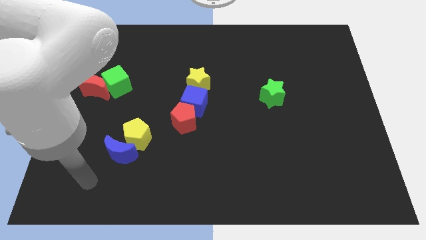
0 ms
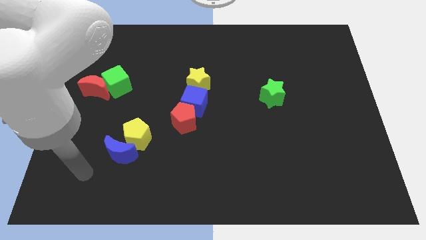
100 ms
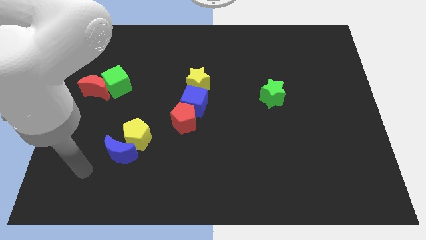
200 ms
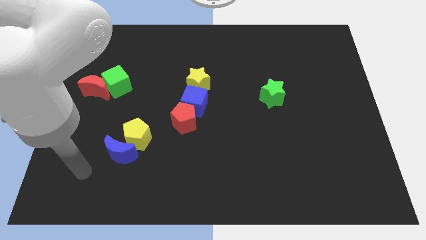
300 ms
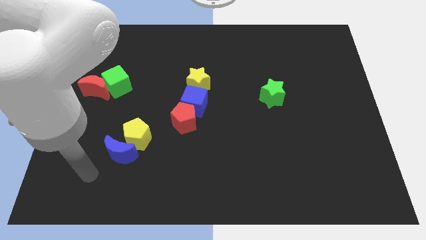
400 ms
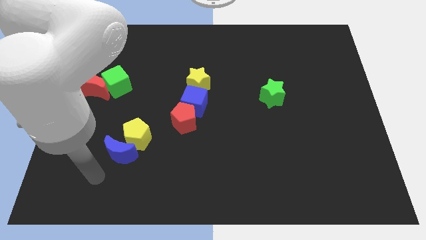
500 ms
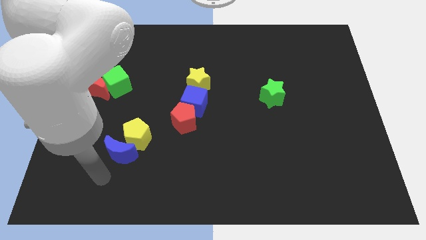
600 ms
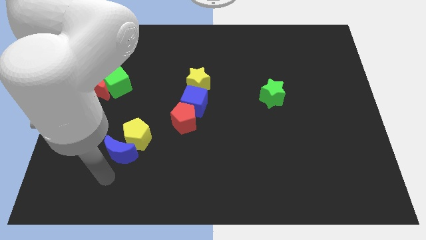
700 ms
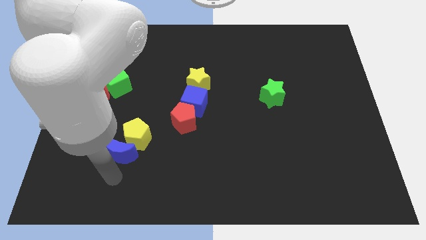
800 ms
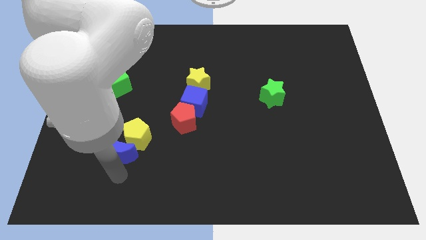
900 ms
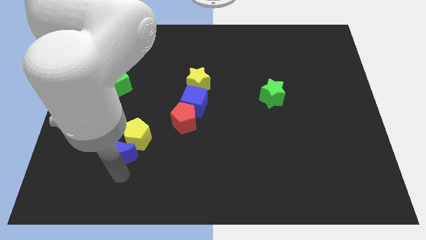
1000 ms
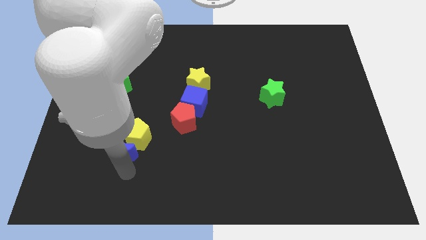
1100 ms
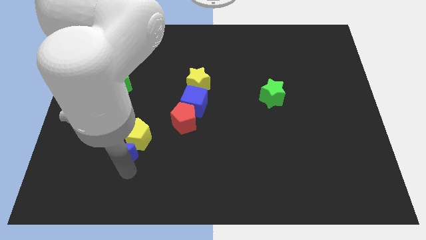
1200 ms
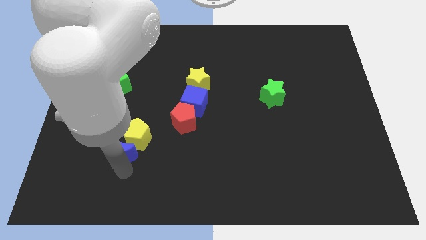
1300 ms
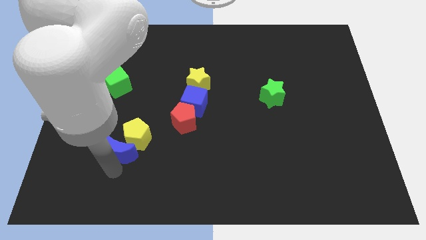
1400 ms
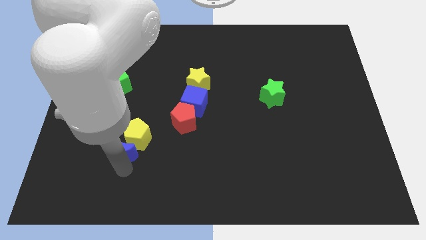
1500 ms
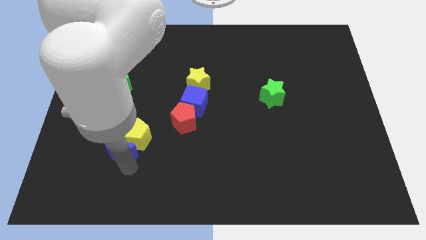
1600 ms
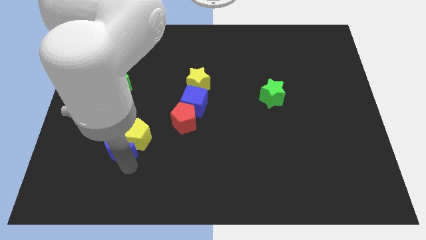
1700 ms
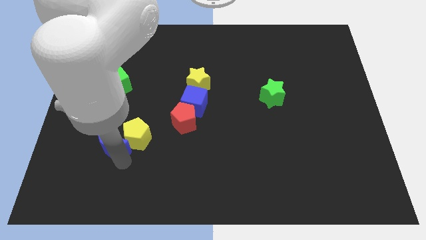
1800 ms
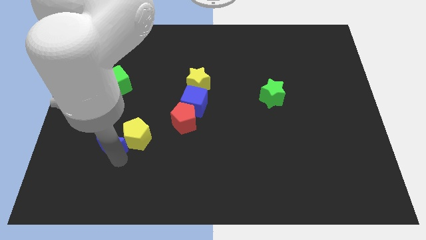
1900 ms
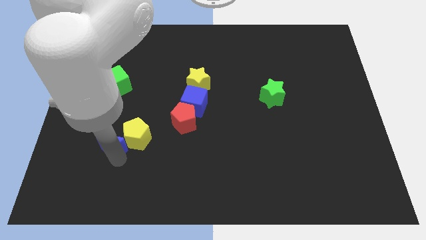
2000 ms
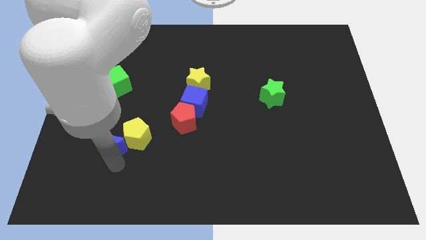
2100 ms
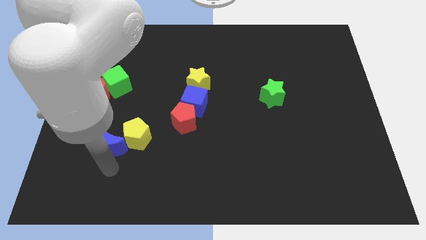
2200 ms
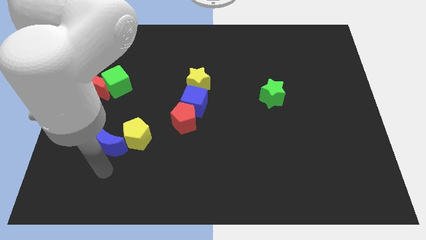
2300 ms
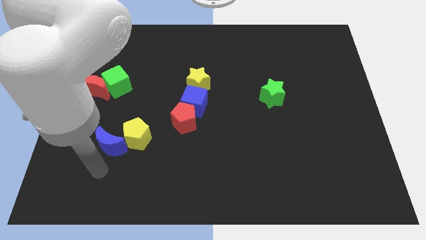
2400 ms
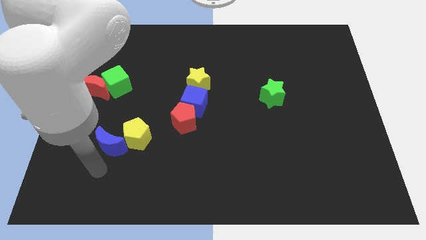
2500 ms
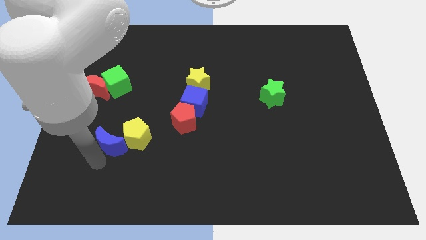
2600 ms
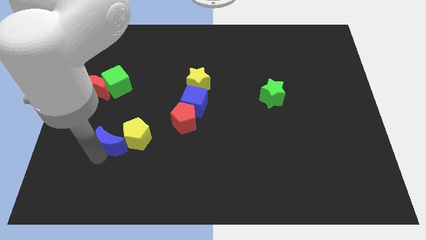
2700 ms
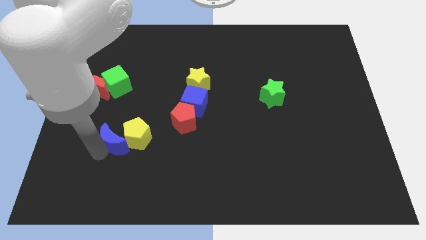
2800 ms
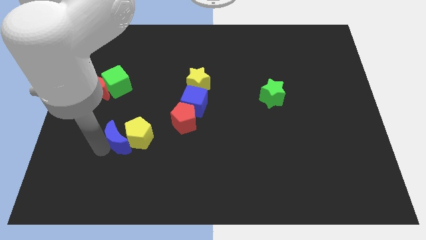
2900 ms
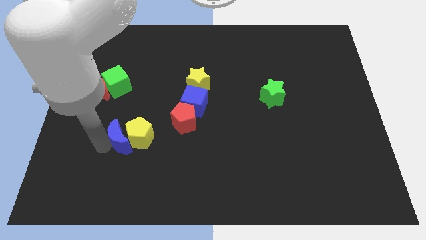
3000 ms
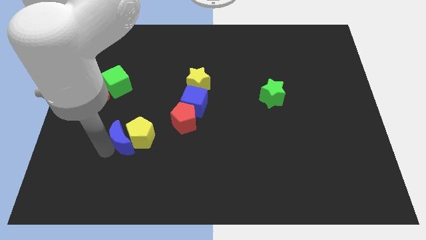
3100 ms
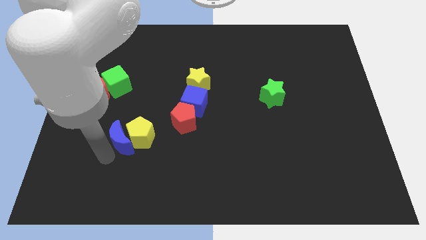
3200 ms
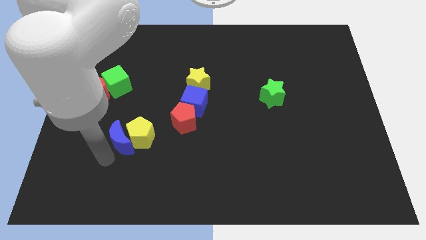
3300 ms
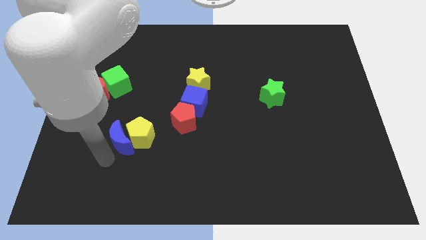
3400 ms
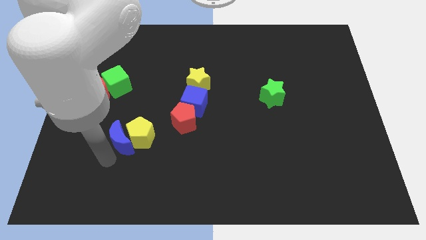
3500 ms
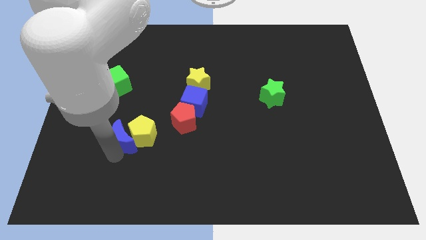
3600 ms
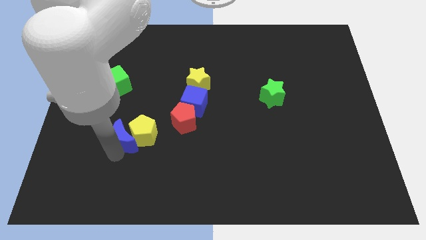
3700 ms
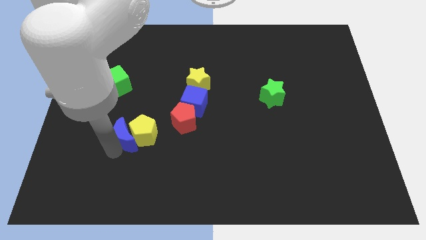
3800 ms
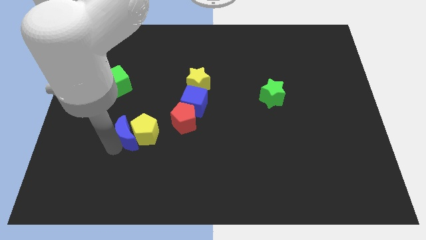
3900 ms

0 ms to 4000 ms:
push the blue crescent left to the yellow pentagon

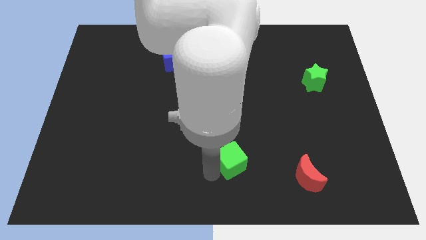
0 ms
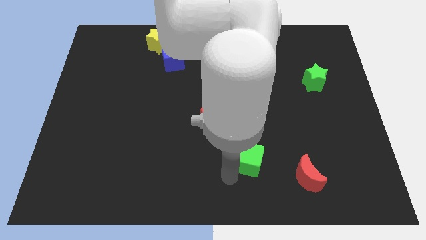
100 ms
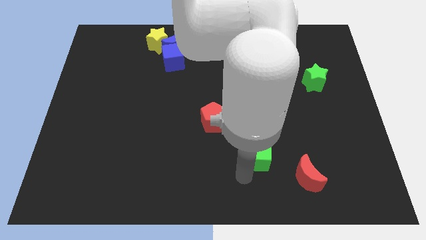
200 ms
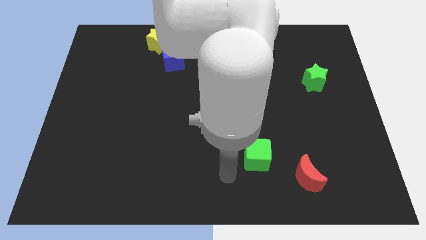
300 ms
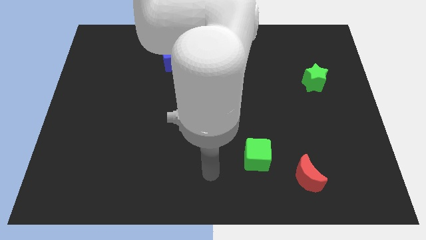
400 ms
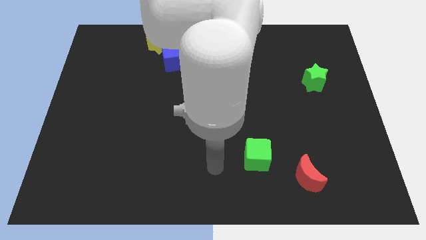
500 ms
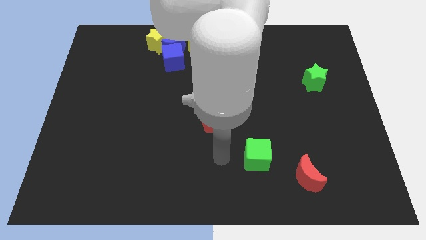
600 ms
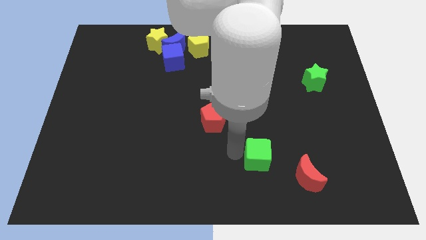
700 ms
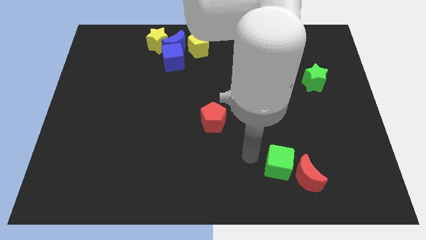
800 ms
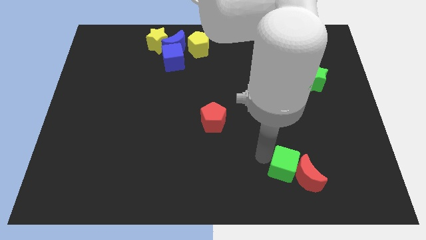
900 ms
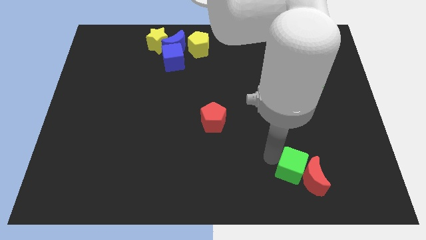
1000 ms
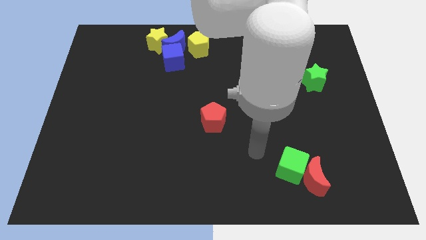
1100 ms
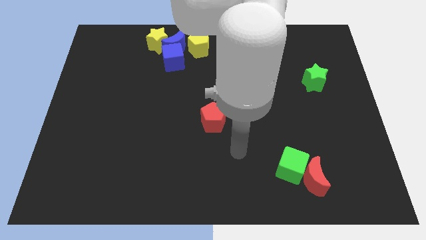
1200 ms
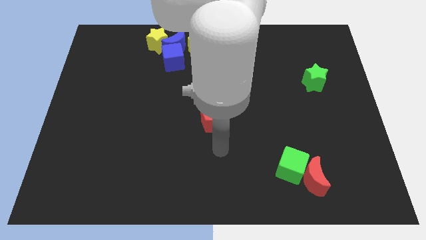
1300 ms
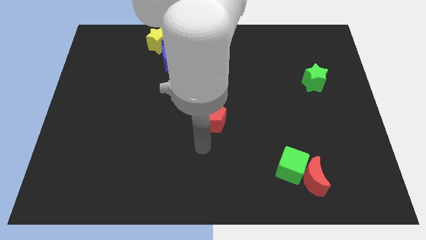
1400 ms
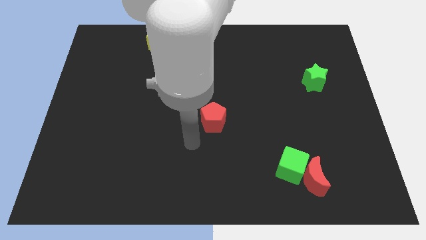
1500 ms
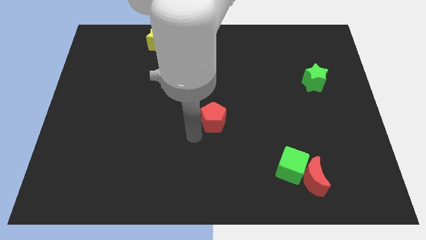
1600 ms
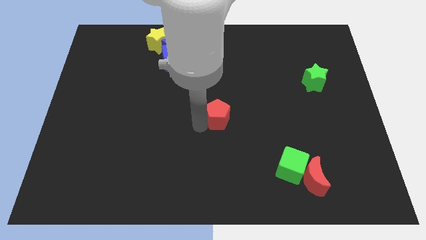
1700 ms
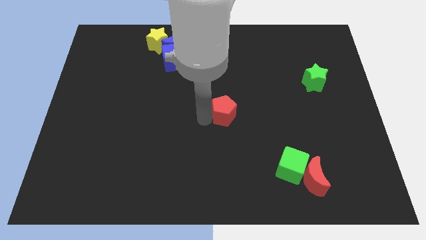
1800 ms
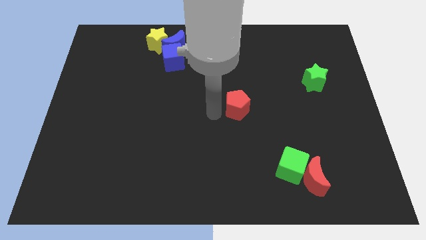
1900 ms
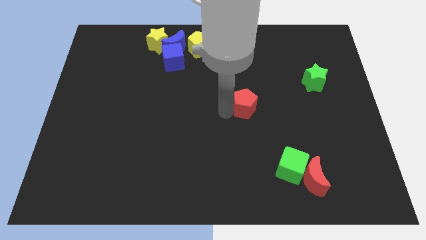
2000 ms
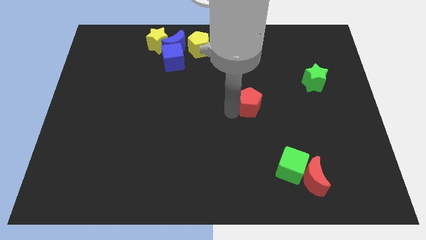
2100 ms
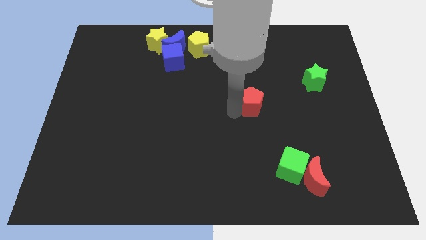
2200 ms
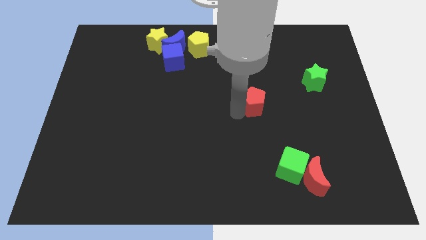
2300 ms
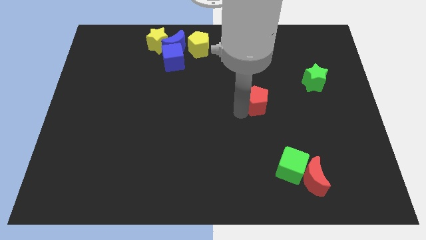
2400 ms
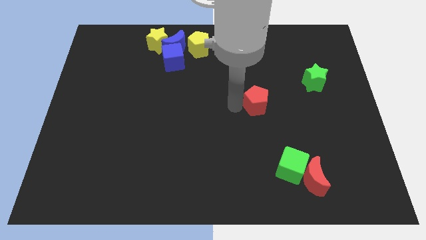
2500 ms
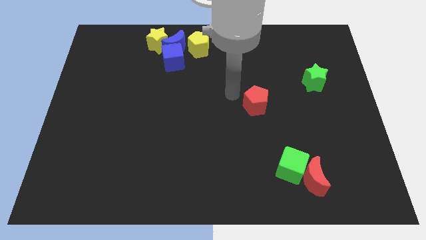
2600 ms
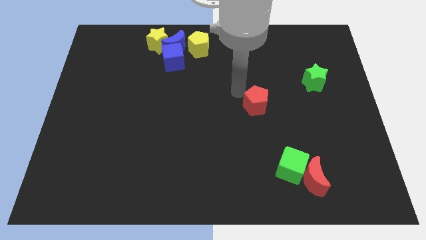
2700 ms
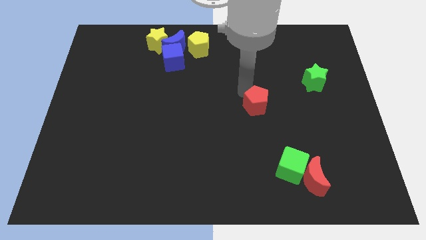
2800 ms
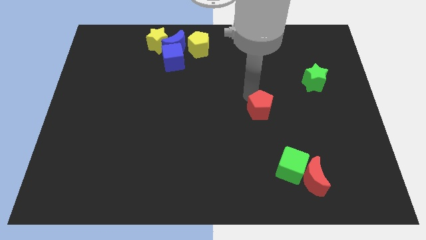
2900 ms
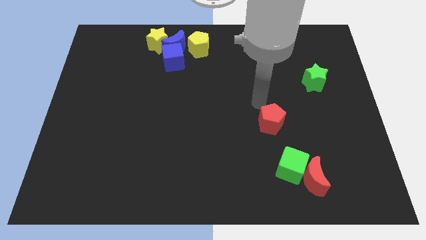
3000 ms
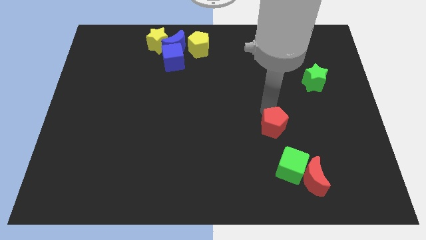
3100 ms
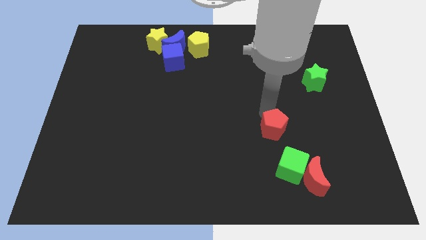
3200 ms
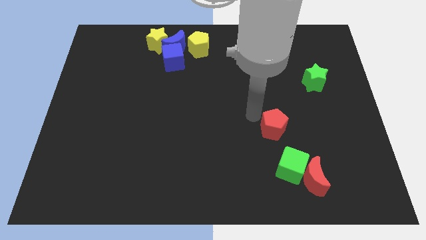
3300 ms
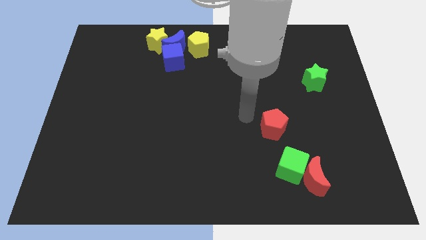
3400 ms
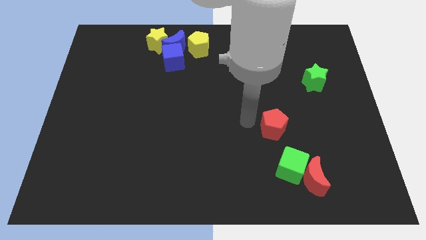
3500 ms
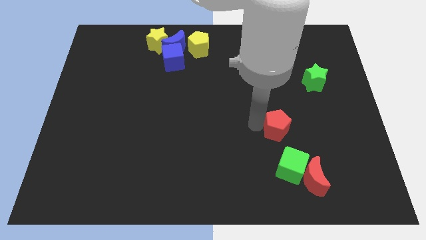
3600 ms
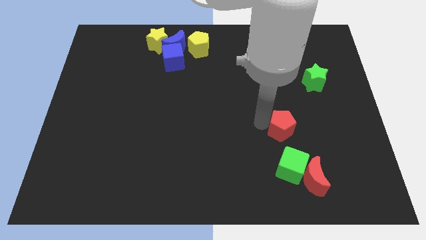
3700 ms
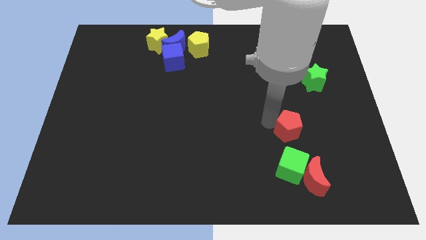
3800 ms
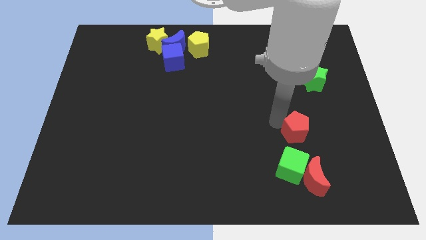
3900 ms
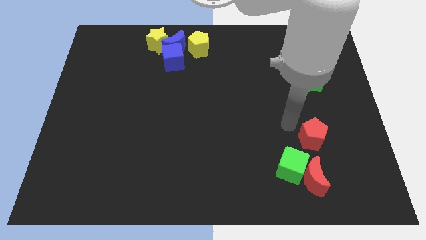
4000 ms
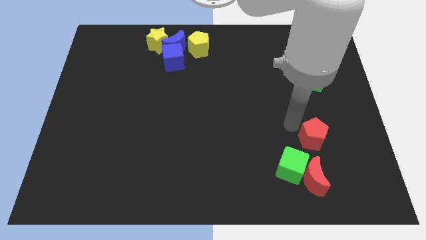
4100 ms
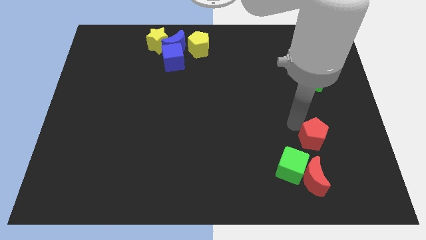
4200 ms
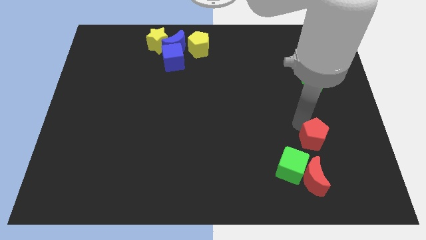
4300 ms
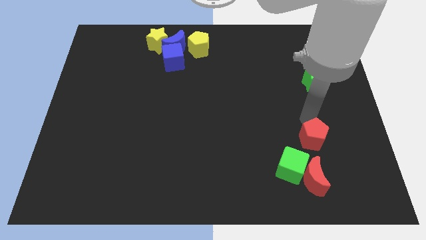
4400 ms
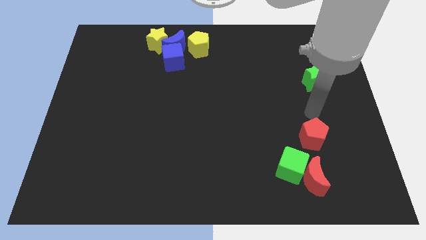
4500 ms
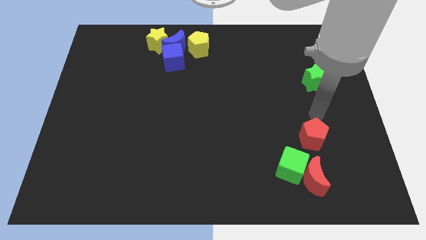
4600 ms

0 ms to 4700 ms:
place the red pentagon above the red crescent

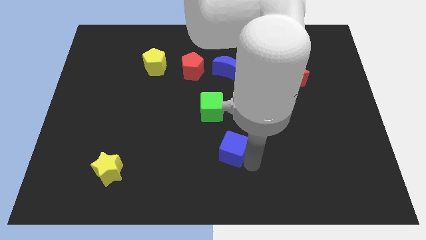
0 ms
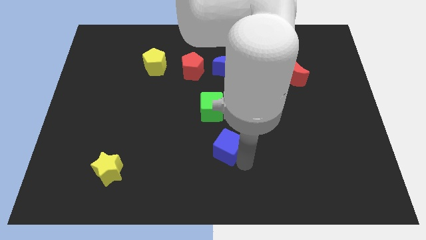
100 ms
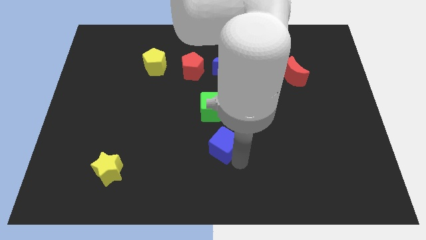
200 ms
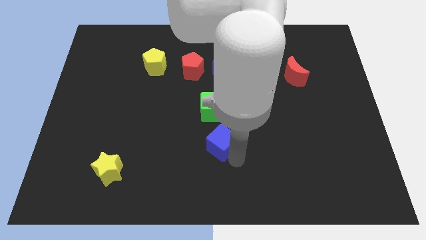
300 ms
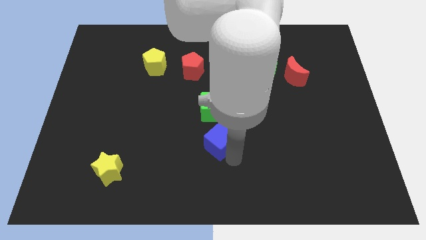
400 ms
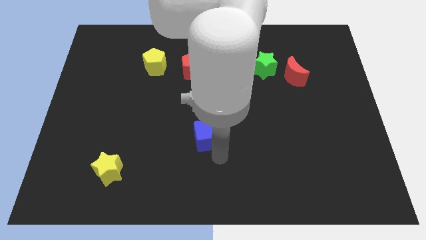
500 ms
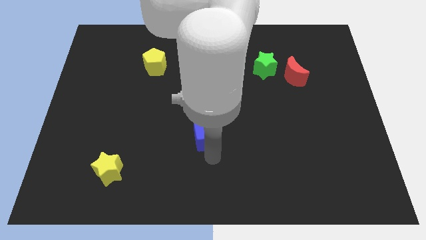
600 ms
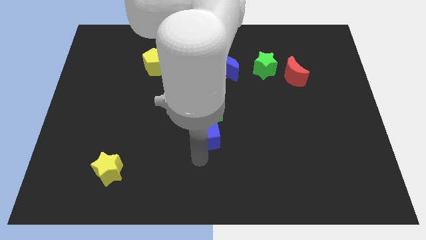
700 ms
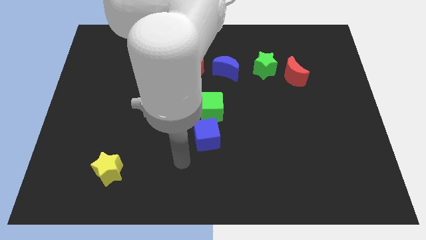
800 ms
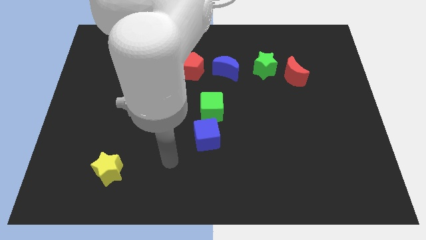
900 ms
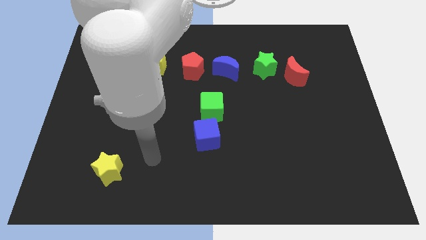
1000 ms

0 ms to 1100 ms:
place the blue cube below the green cube
